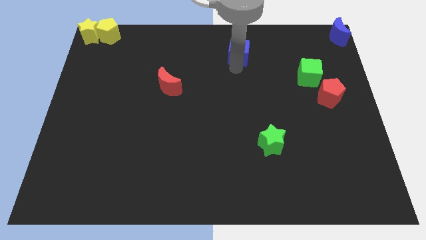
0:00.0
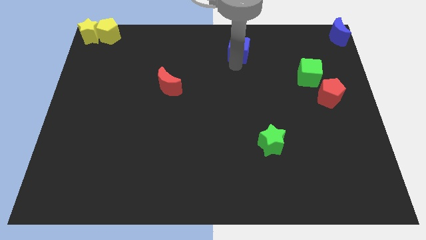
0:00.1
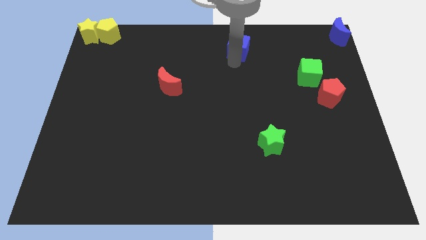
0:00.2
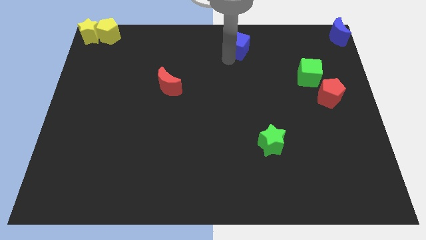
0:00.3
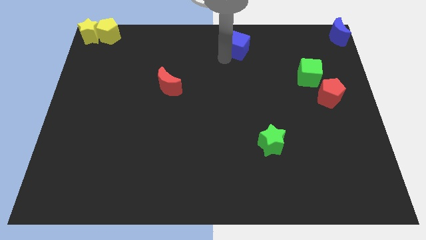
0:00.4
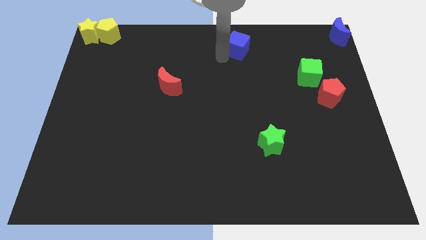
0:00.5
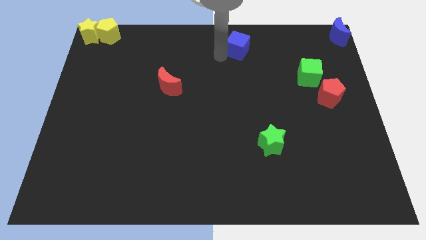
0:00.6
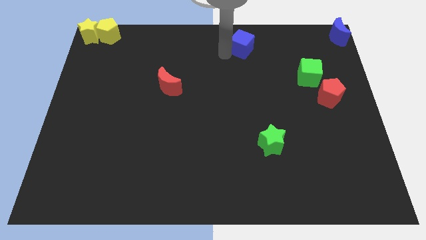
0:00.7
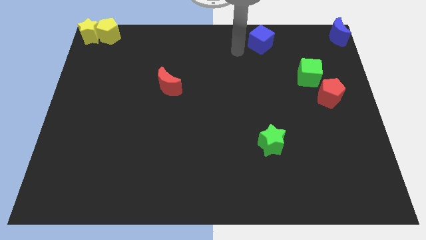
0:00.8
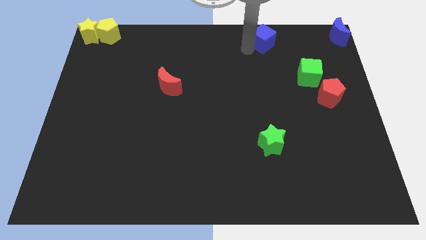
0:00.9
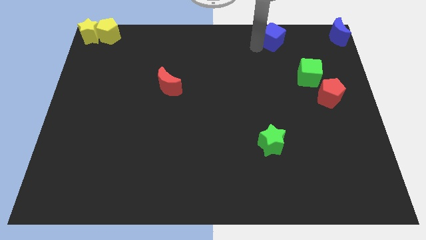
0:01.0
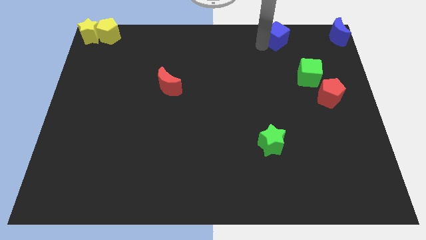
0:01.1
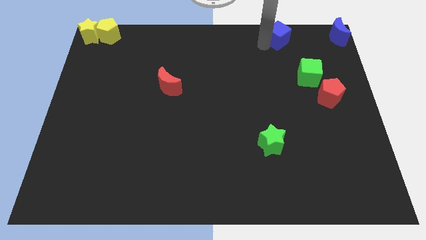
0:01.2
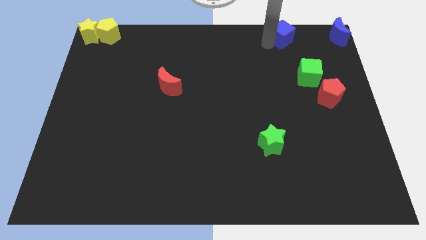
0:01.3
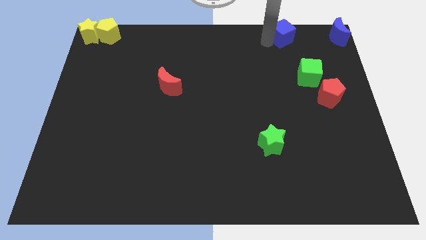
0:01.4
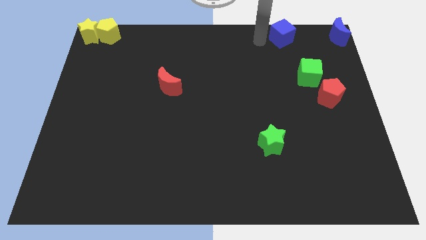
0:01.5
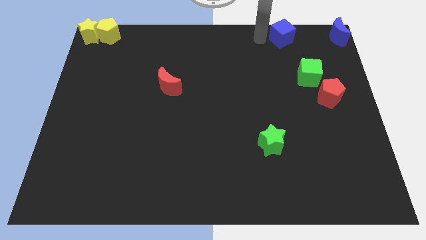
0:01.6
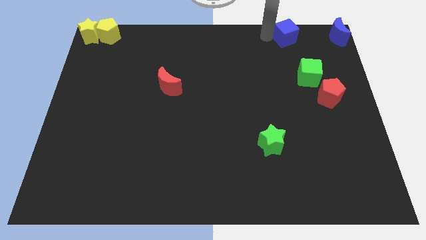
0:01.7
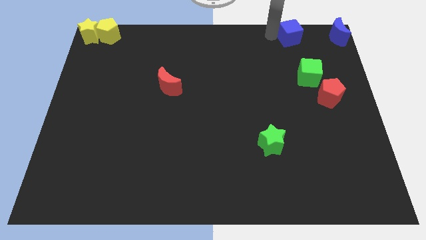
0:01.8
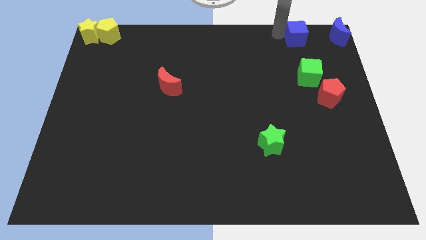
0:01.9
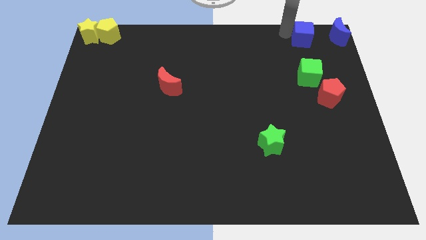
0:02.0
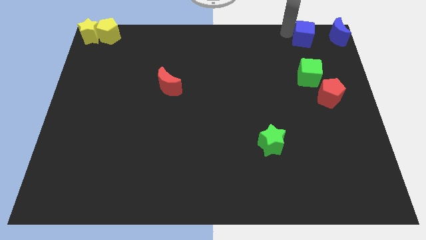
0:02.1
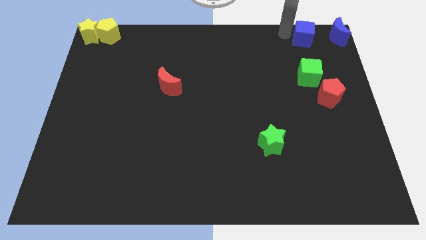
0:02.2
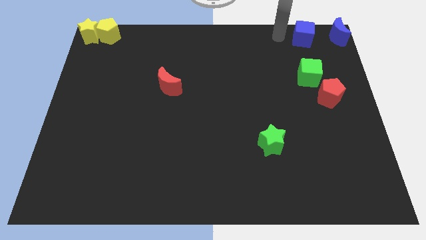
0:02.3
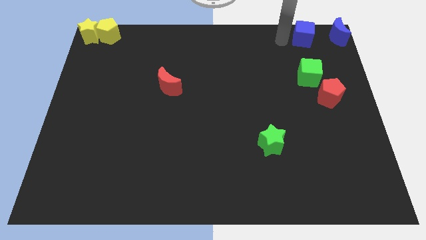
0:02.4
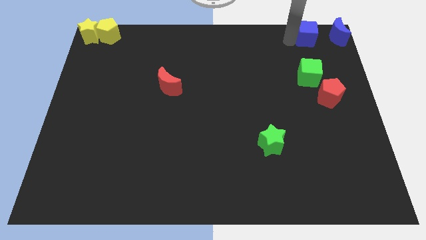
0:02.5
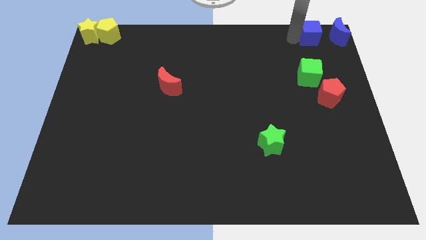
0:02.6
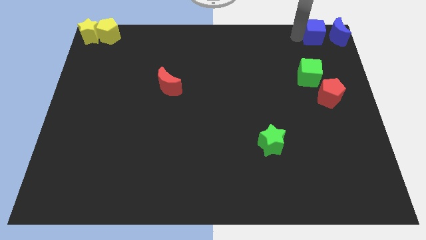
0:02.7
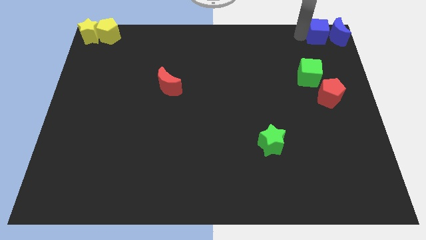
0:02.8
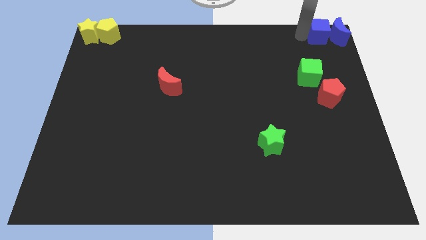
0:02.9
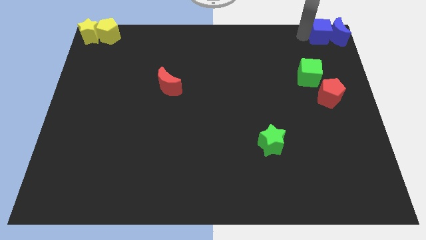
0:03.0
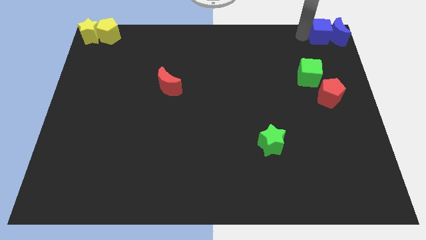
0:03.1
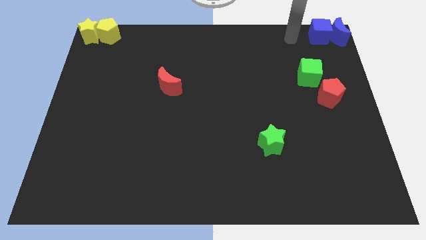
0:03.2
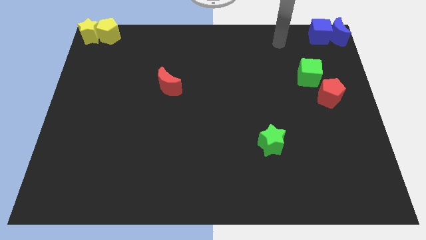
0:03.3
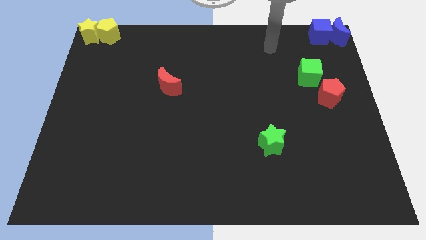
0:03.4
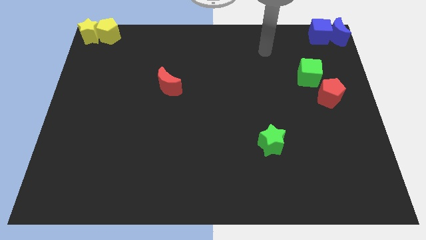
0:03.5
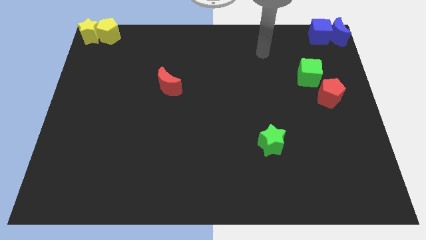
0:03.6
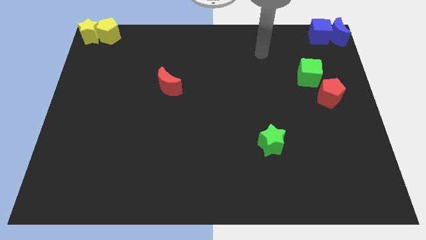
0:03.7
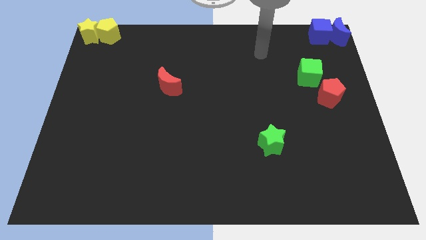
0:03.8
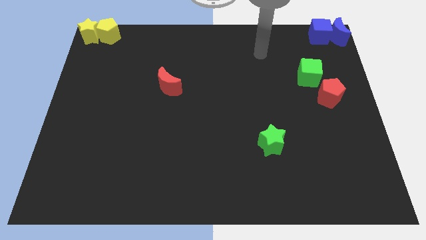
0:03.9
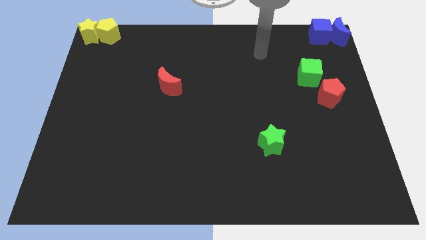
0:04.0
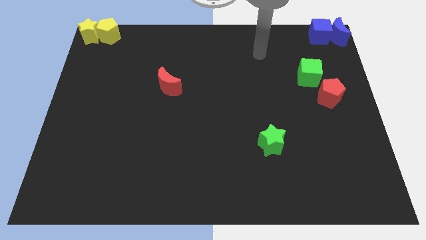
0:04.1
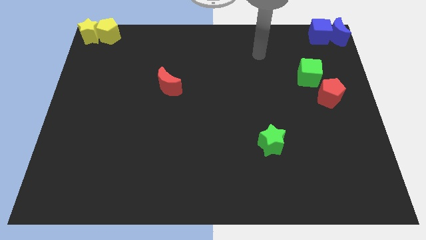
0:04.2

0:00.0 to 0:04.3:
push the blue cube left to the blue crescent

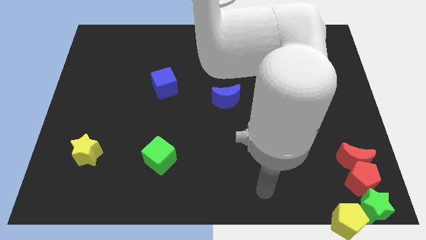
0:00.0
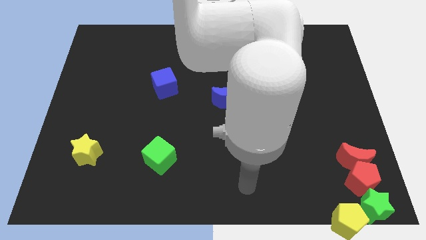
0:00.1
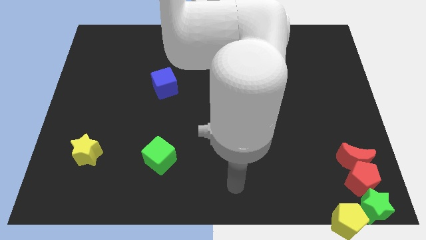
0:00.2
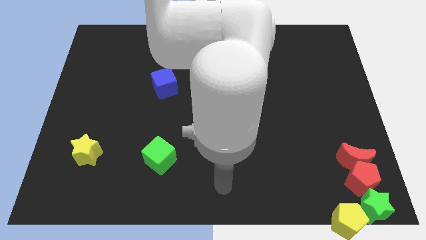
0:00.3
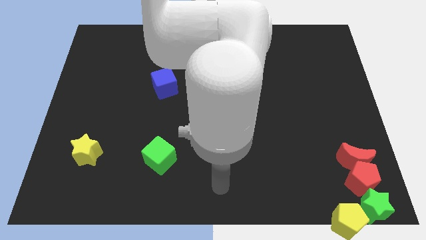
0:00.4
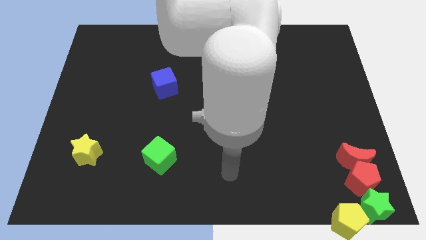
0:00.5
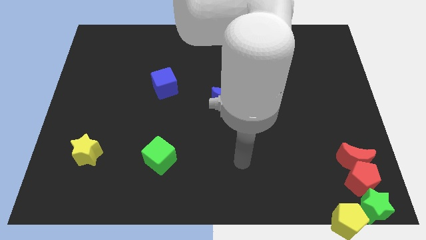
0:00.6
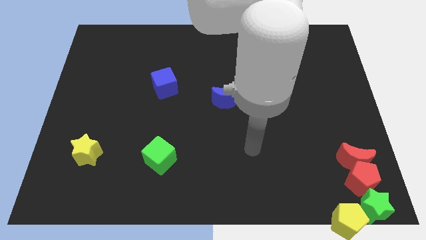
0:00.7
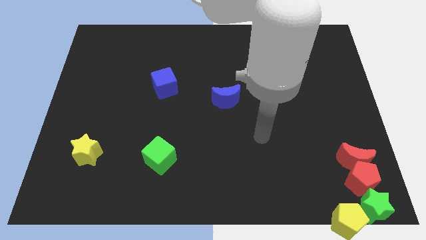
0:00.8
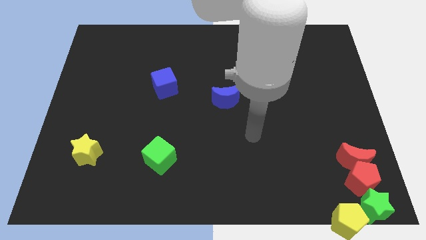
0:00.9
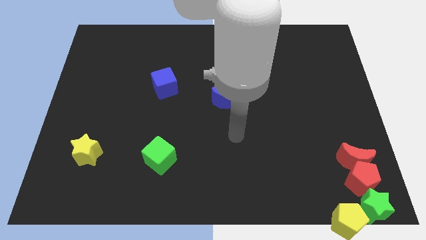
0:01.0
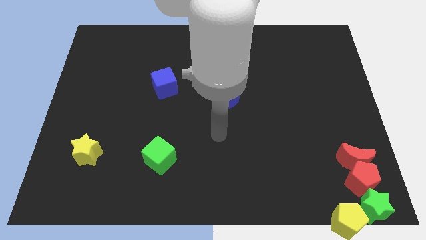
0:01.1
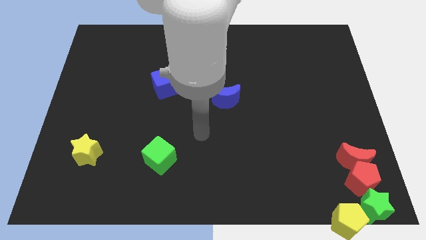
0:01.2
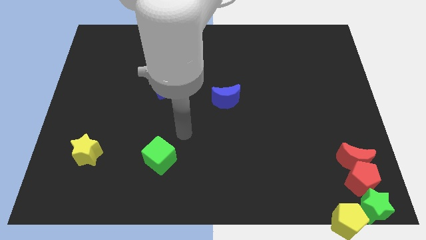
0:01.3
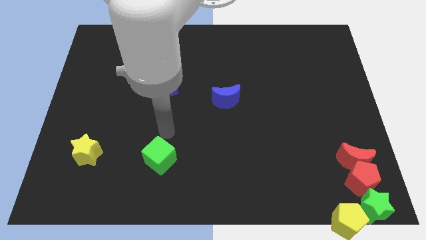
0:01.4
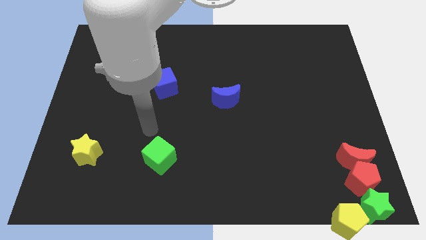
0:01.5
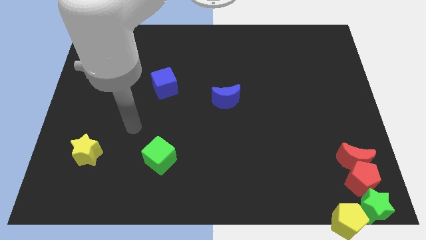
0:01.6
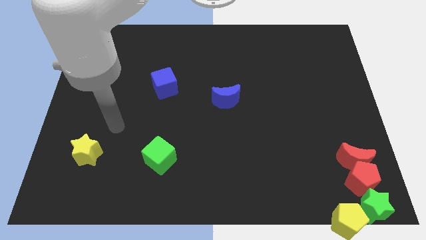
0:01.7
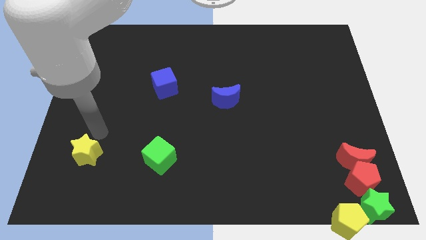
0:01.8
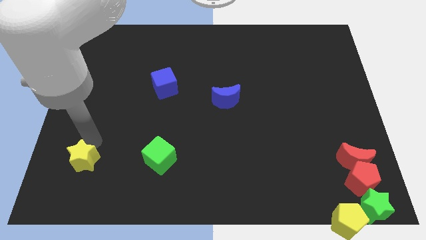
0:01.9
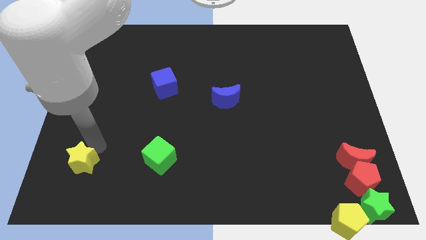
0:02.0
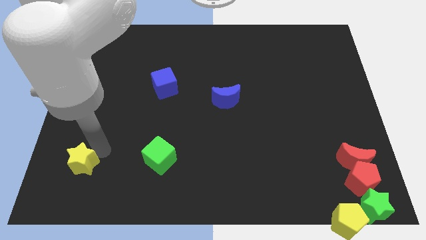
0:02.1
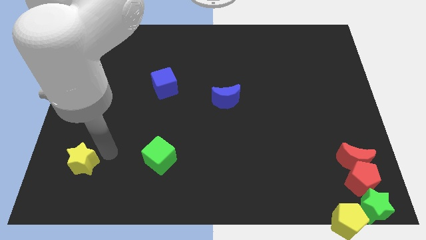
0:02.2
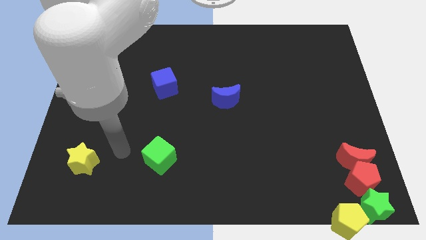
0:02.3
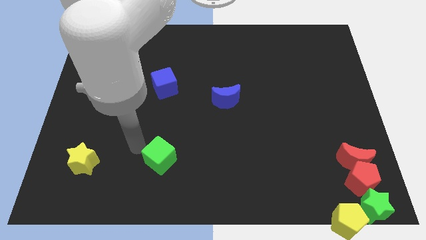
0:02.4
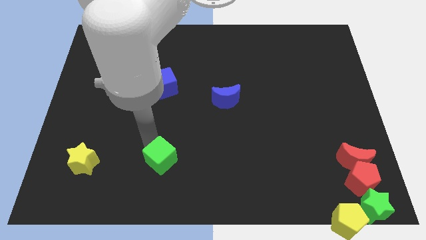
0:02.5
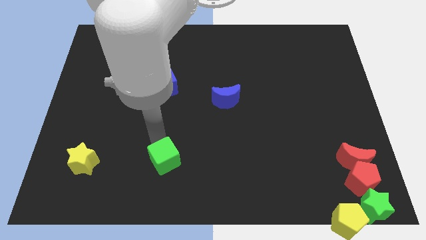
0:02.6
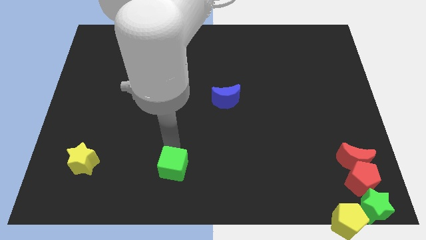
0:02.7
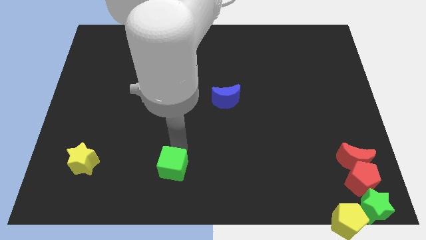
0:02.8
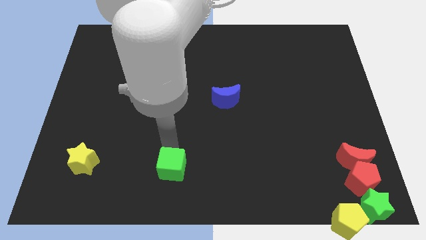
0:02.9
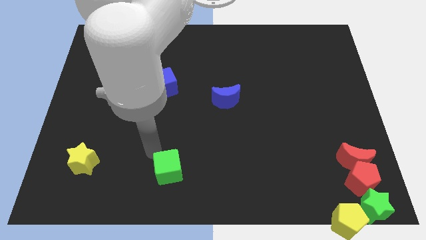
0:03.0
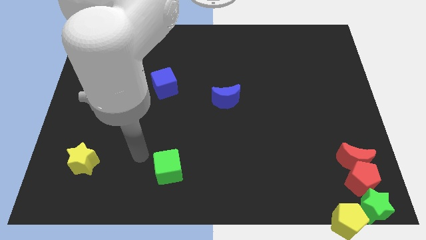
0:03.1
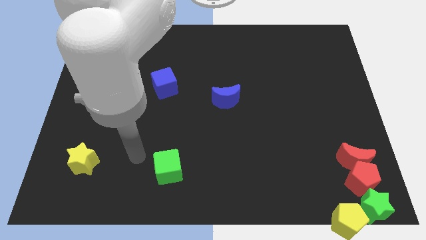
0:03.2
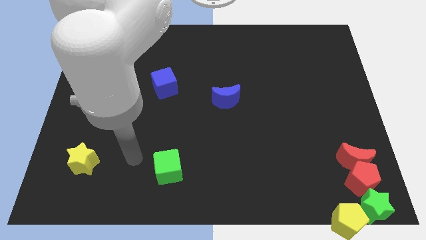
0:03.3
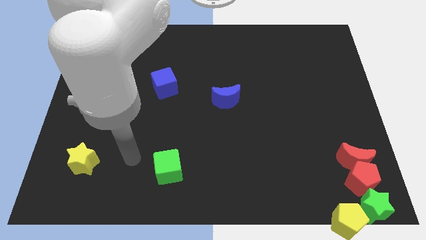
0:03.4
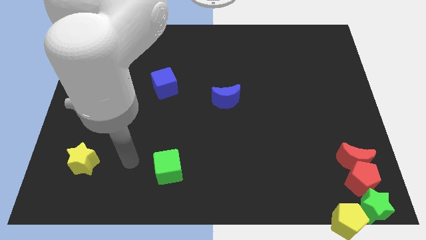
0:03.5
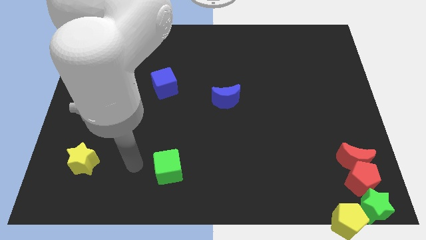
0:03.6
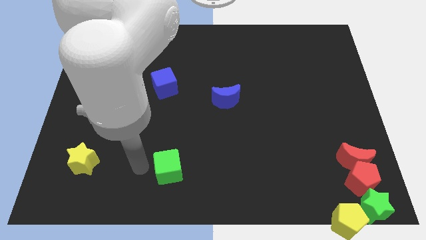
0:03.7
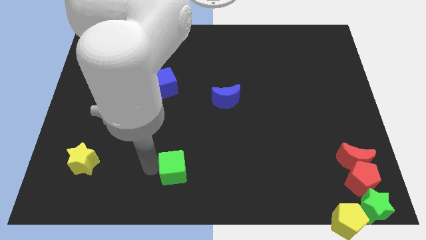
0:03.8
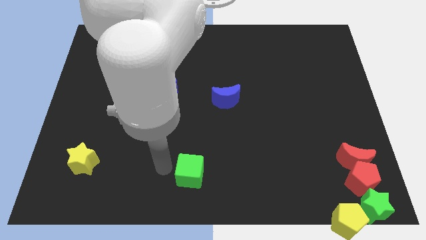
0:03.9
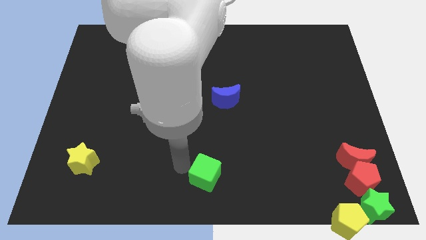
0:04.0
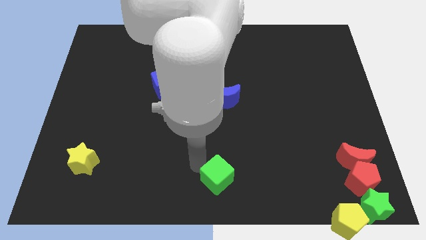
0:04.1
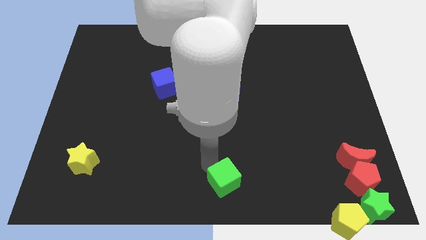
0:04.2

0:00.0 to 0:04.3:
place the green cube vertically below the blue moon

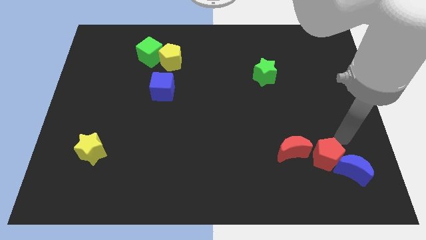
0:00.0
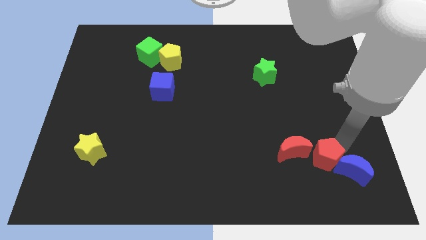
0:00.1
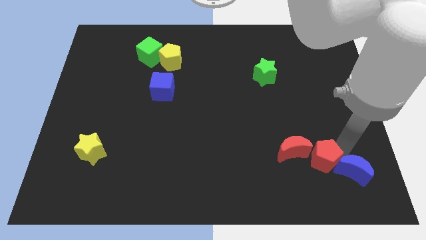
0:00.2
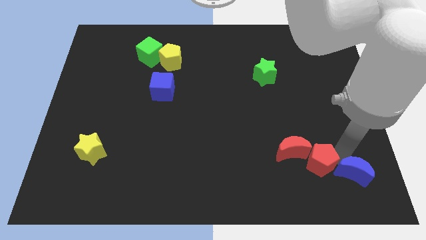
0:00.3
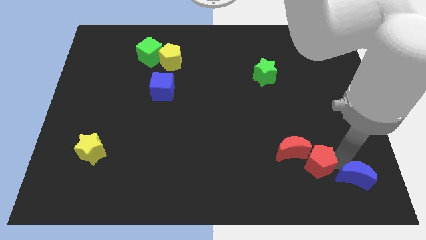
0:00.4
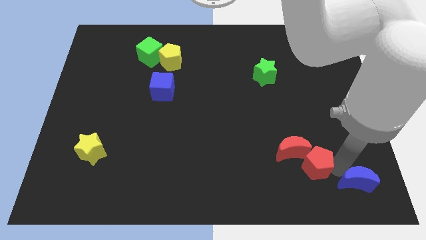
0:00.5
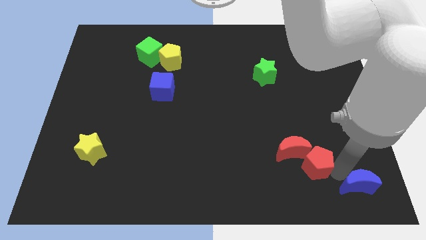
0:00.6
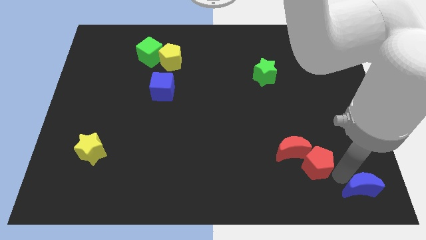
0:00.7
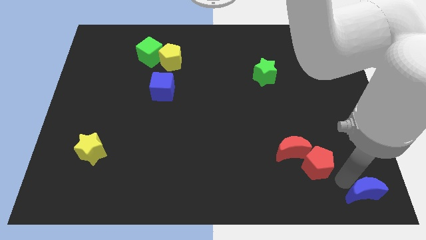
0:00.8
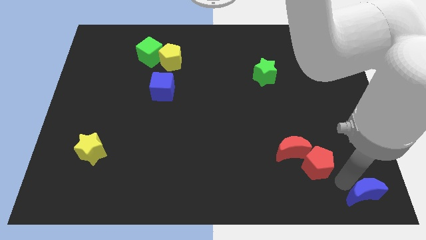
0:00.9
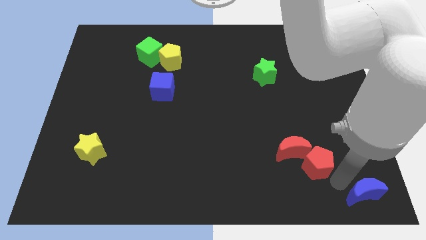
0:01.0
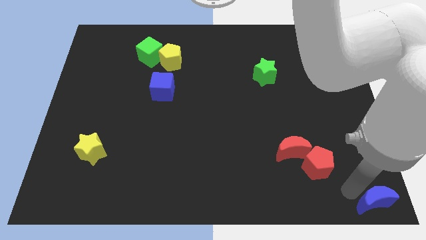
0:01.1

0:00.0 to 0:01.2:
separate the blue crescent from the red pentagon
